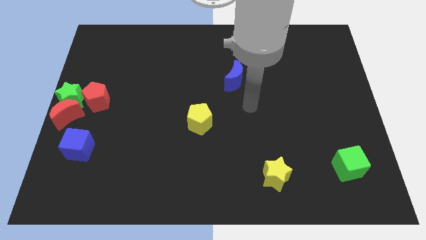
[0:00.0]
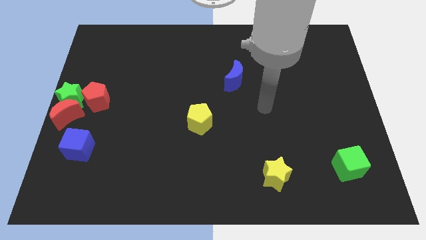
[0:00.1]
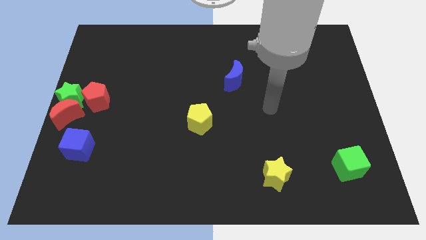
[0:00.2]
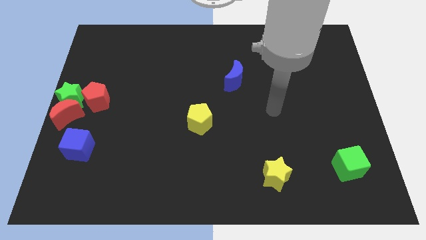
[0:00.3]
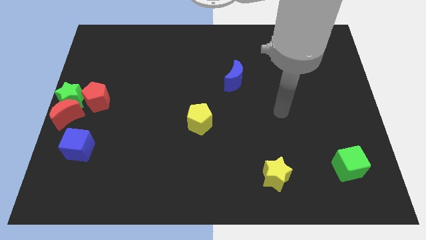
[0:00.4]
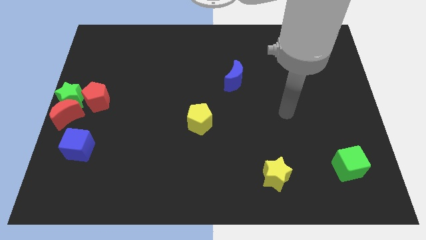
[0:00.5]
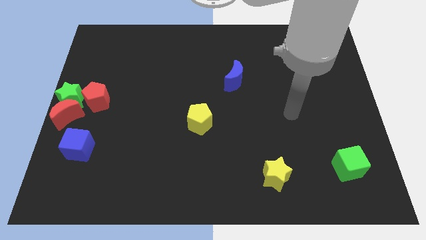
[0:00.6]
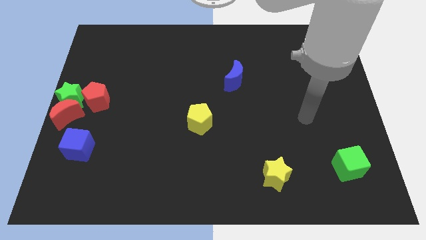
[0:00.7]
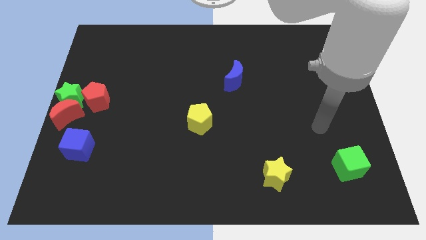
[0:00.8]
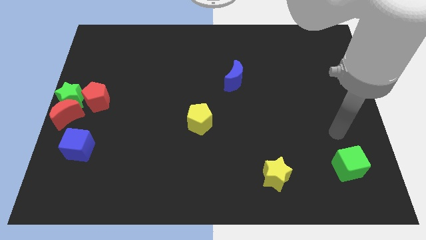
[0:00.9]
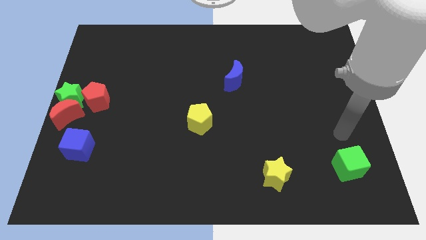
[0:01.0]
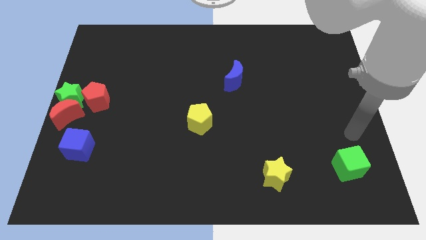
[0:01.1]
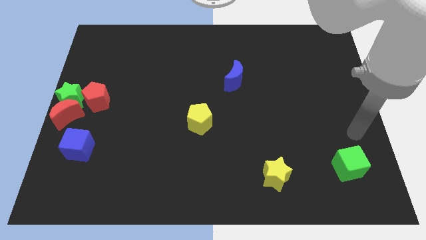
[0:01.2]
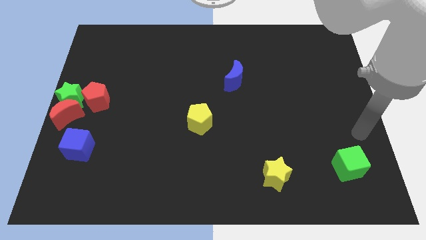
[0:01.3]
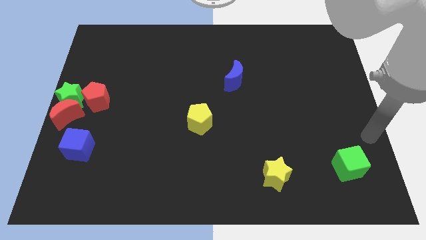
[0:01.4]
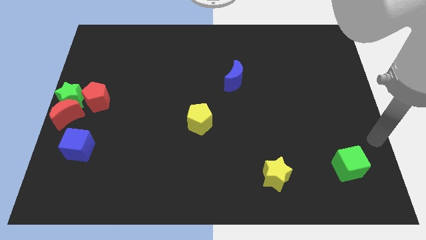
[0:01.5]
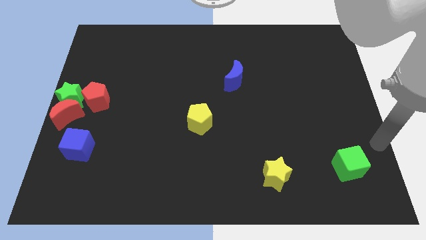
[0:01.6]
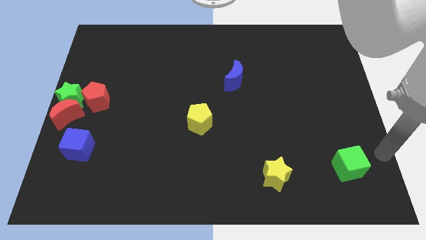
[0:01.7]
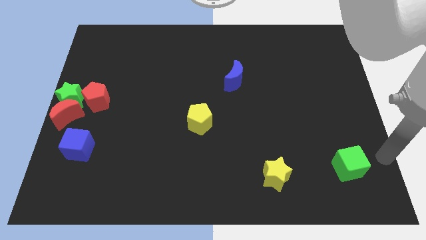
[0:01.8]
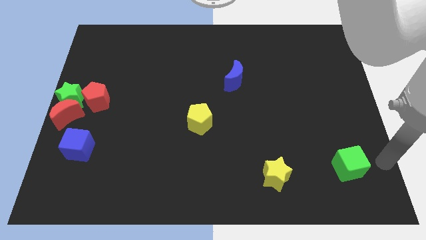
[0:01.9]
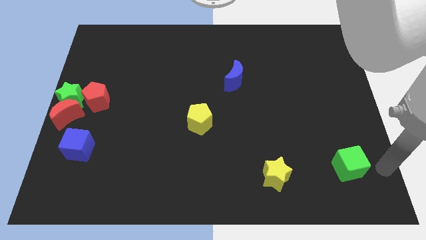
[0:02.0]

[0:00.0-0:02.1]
move your arm and point to the right of green cube

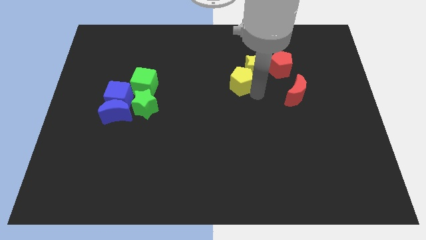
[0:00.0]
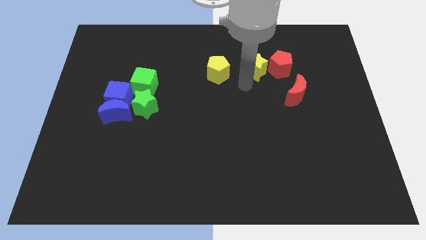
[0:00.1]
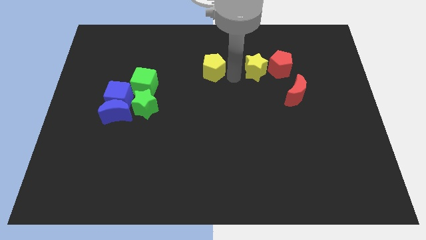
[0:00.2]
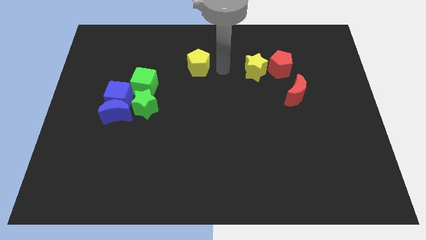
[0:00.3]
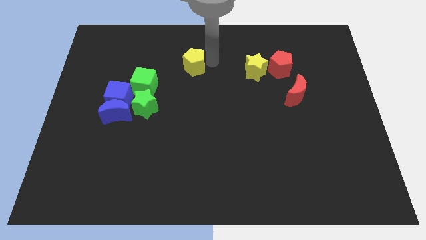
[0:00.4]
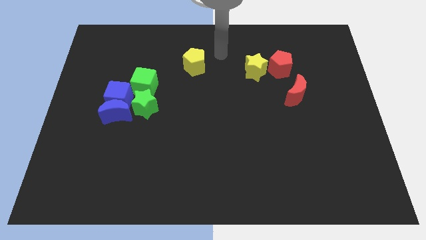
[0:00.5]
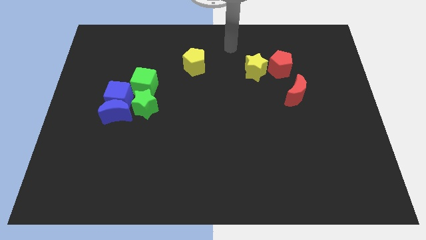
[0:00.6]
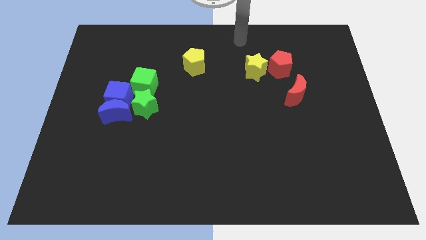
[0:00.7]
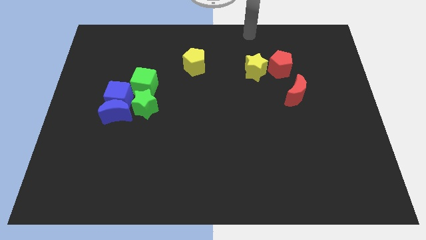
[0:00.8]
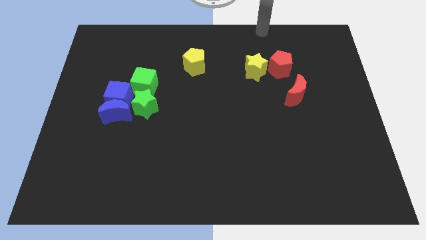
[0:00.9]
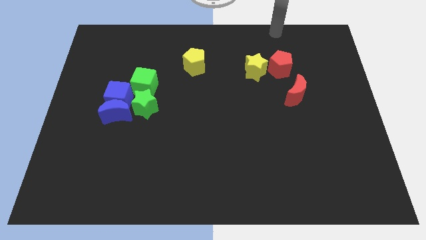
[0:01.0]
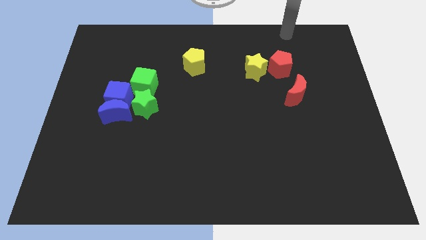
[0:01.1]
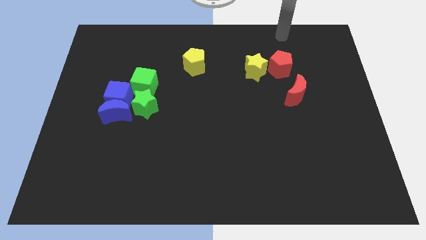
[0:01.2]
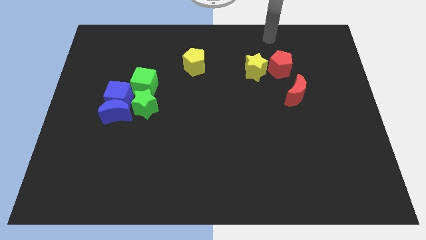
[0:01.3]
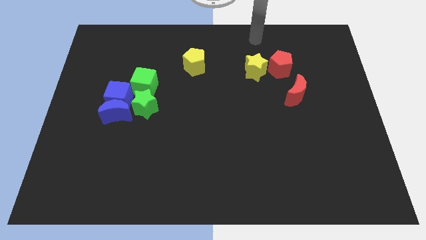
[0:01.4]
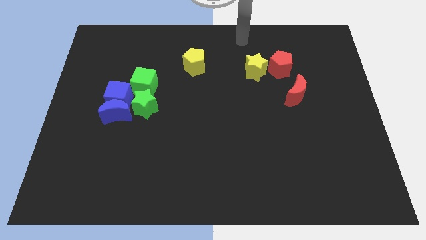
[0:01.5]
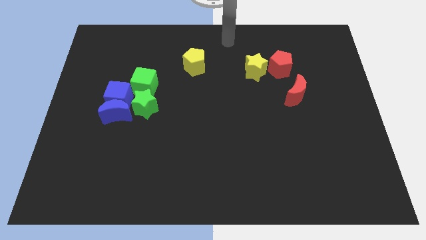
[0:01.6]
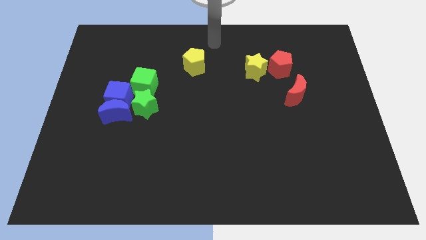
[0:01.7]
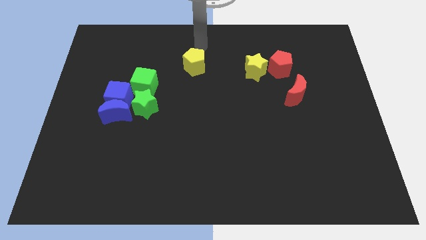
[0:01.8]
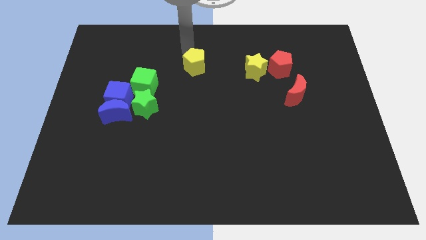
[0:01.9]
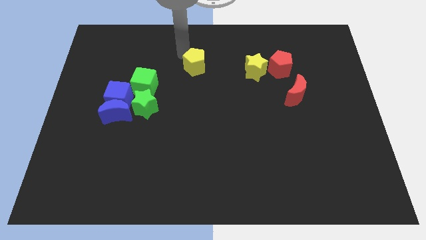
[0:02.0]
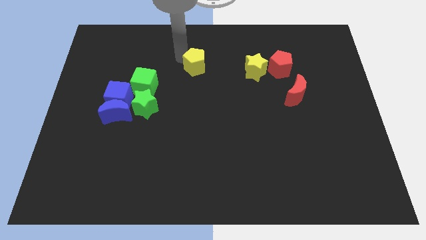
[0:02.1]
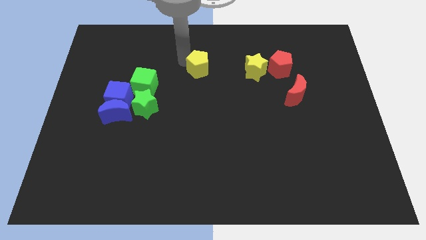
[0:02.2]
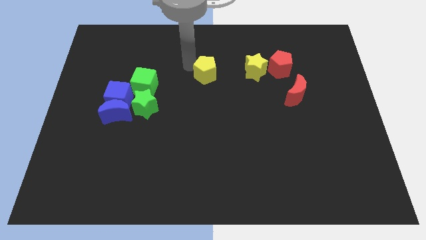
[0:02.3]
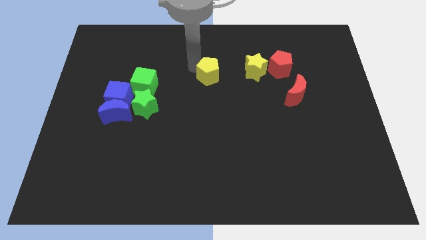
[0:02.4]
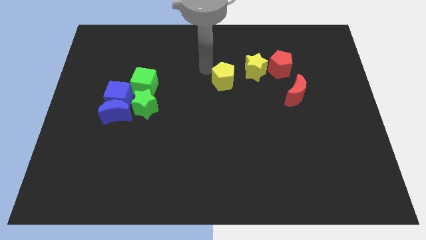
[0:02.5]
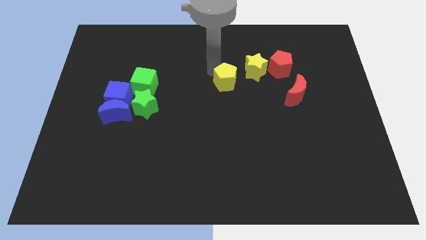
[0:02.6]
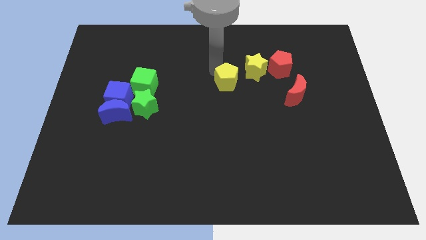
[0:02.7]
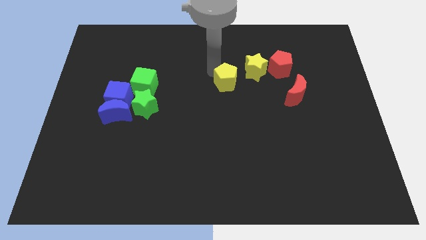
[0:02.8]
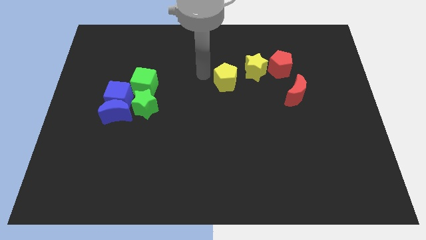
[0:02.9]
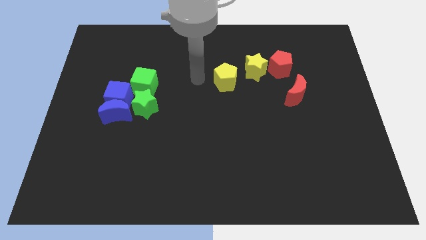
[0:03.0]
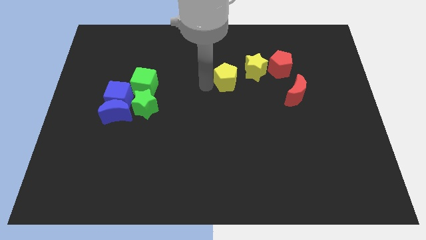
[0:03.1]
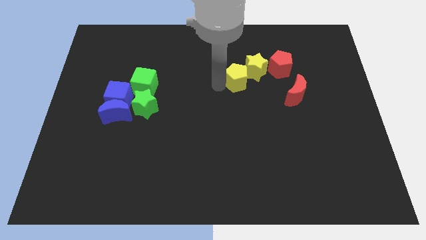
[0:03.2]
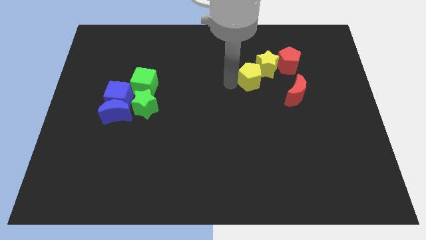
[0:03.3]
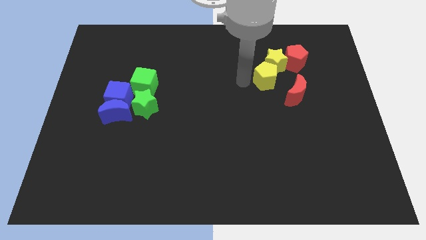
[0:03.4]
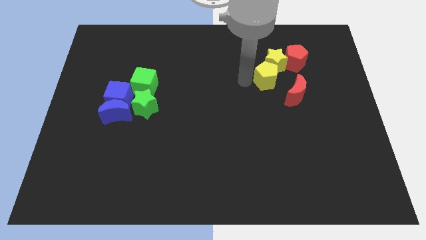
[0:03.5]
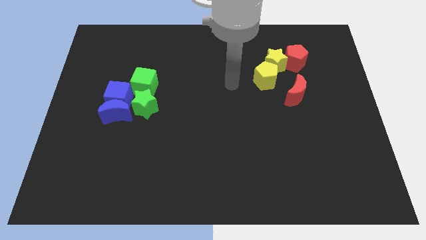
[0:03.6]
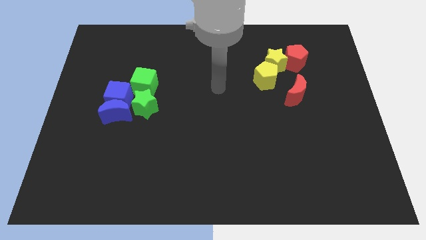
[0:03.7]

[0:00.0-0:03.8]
move the yellow star into the red pentagon

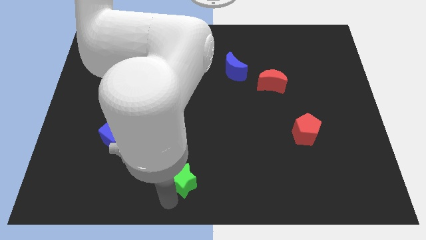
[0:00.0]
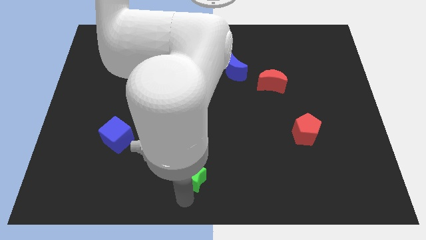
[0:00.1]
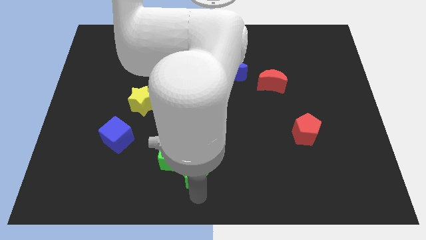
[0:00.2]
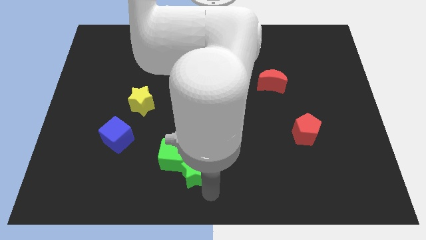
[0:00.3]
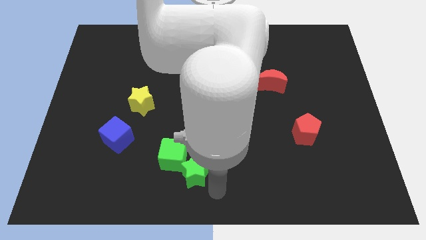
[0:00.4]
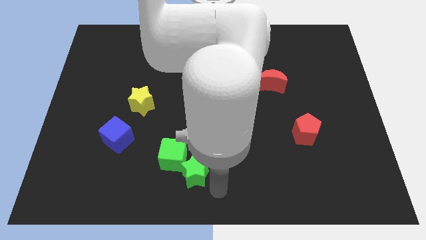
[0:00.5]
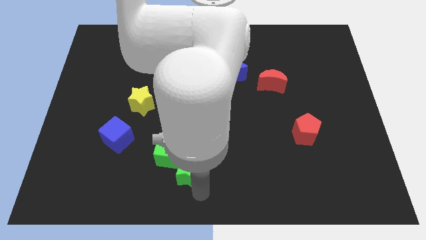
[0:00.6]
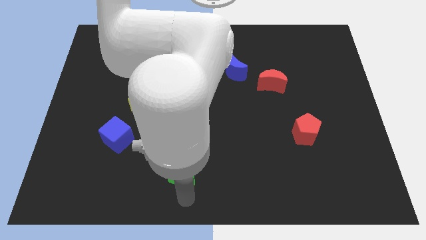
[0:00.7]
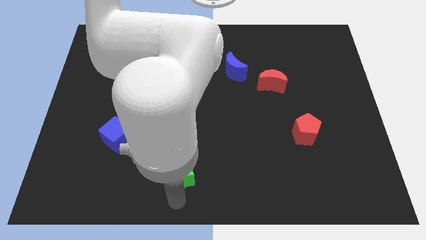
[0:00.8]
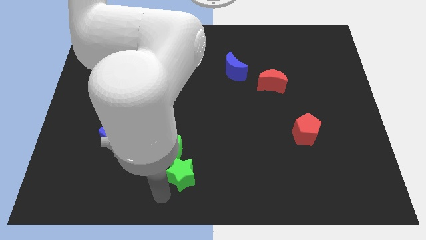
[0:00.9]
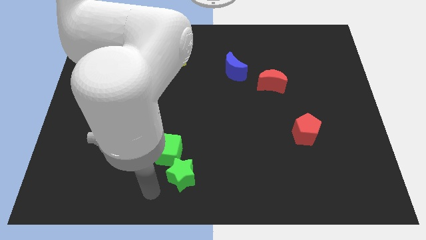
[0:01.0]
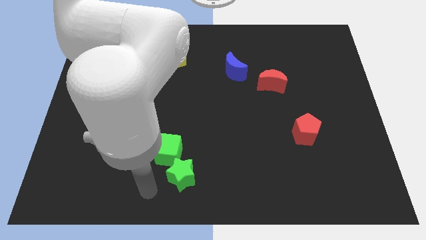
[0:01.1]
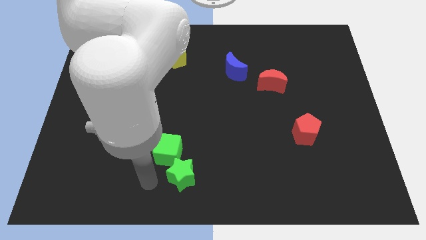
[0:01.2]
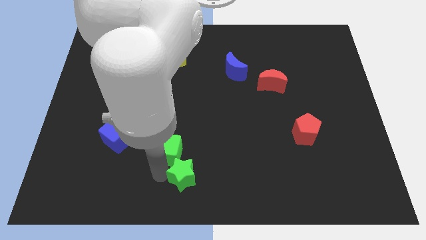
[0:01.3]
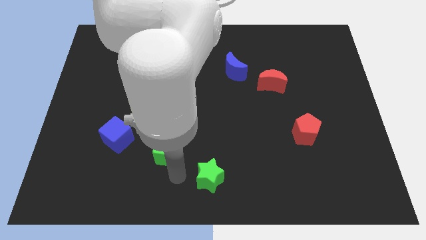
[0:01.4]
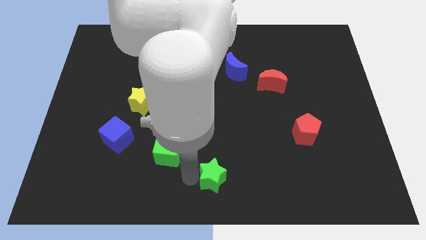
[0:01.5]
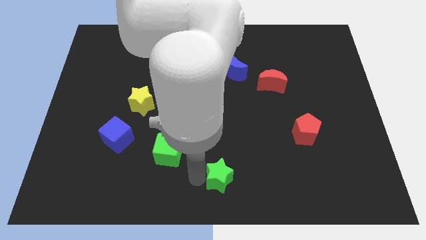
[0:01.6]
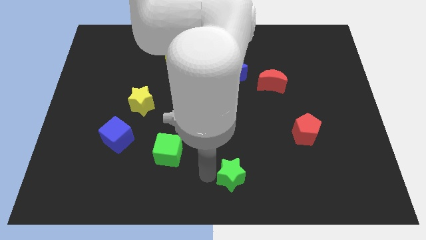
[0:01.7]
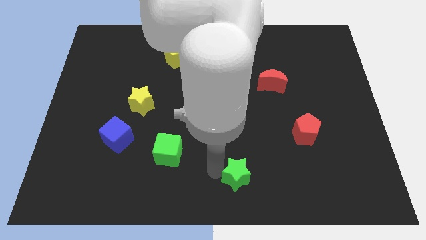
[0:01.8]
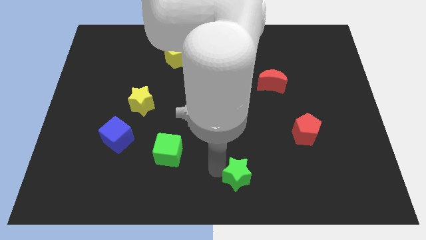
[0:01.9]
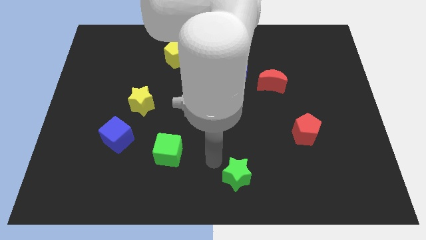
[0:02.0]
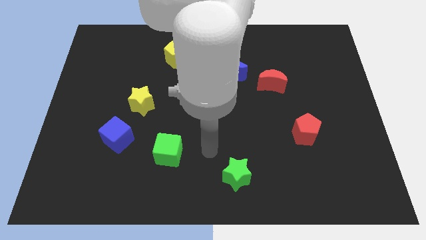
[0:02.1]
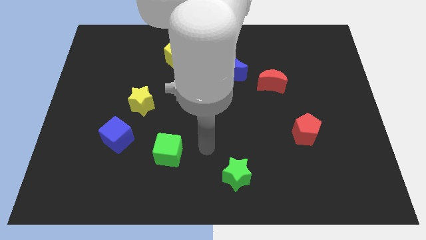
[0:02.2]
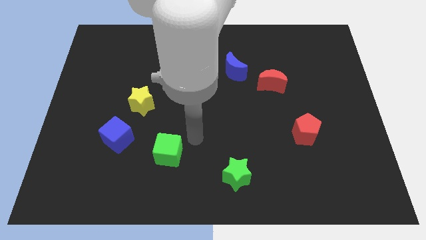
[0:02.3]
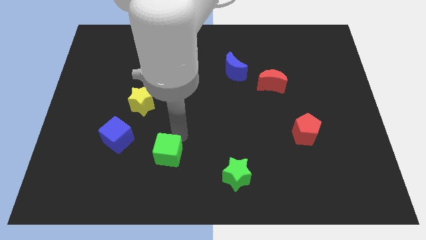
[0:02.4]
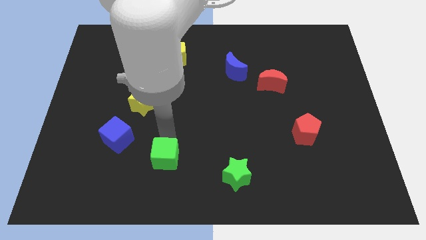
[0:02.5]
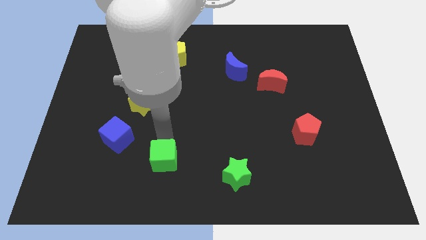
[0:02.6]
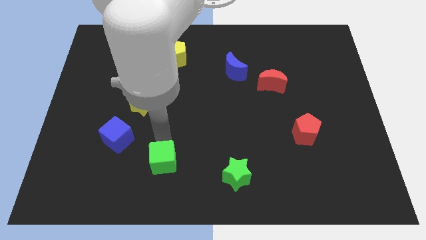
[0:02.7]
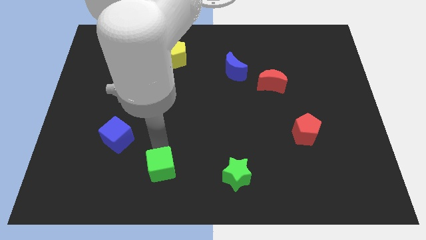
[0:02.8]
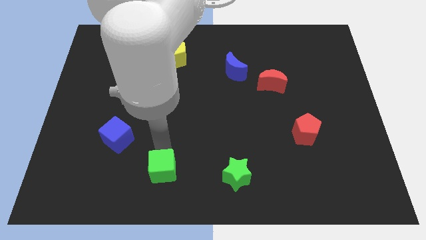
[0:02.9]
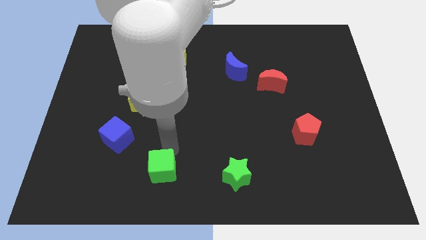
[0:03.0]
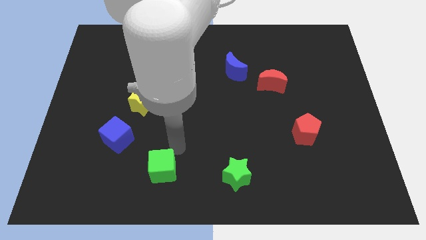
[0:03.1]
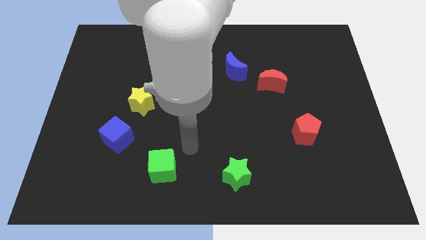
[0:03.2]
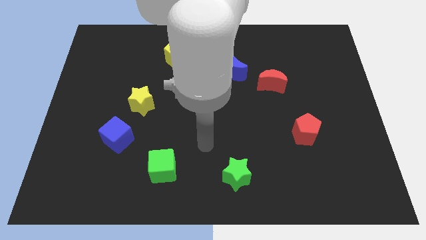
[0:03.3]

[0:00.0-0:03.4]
put the green cube between the green star and blue cube
